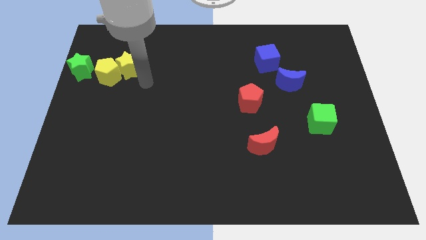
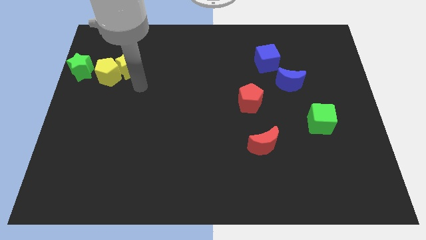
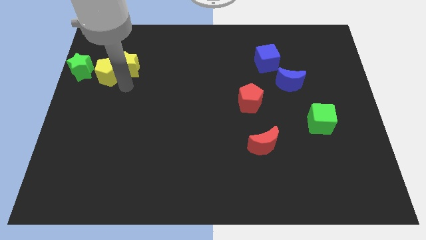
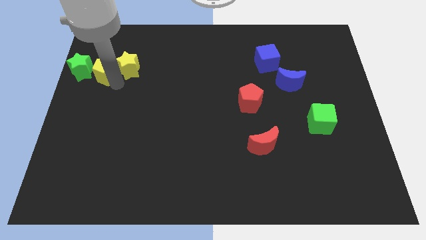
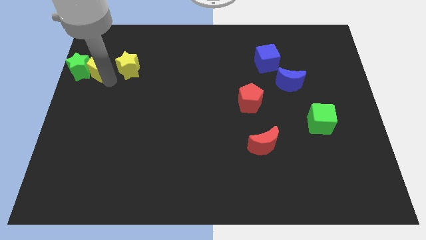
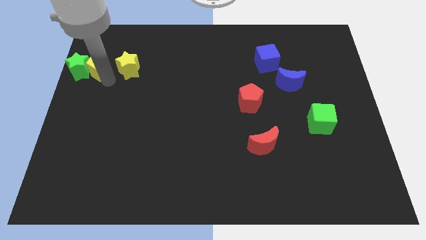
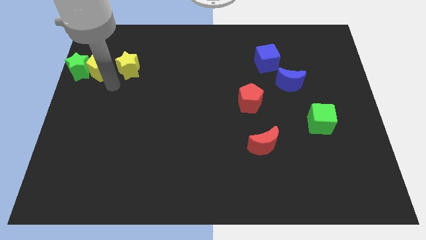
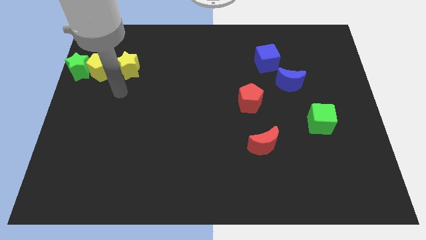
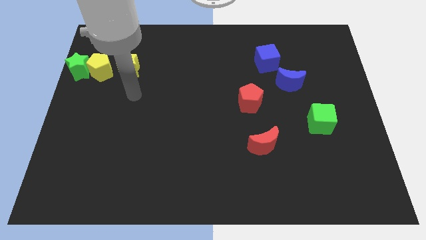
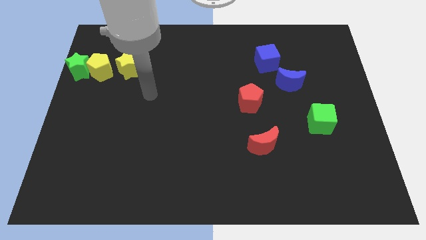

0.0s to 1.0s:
move the yellow pentagon into green star

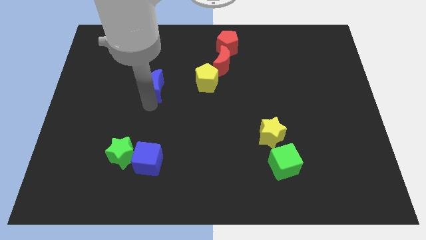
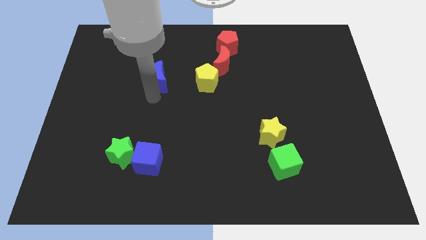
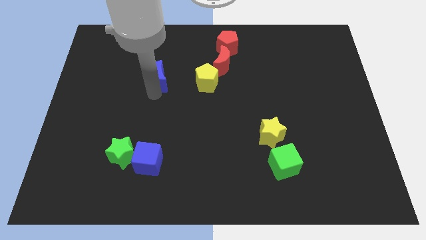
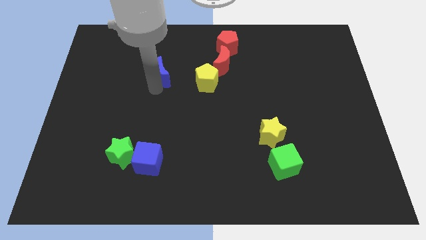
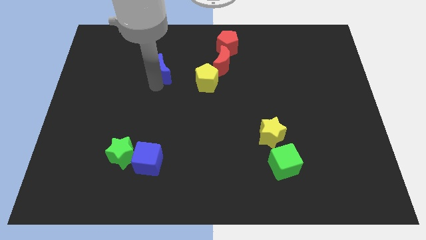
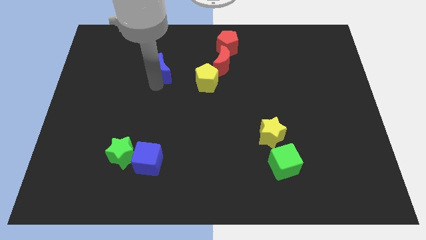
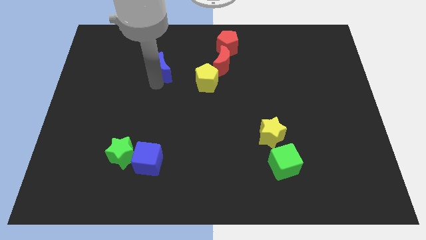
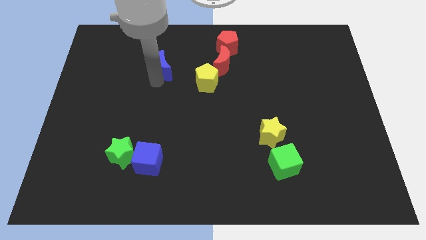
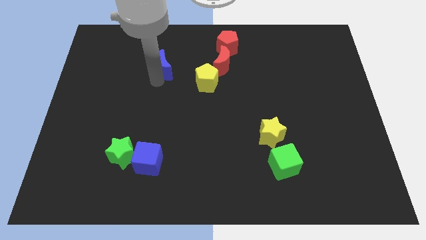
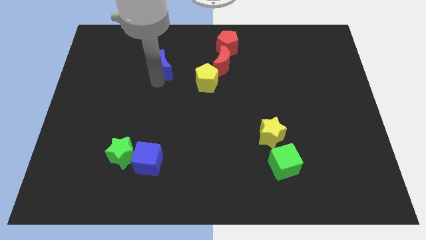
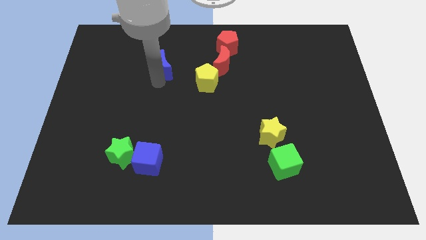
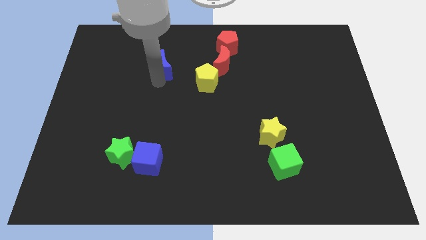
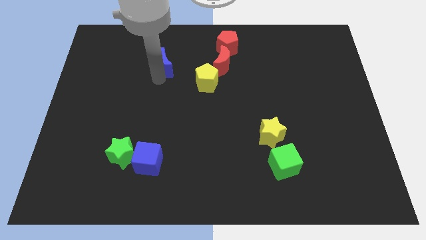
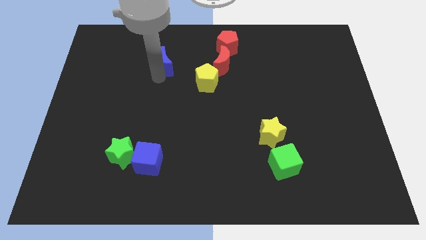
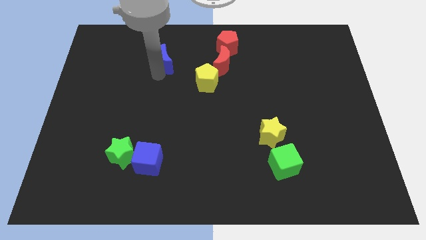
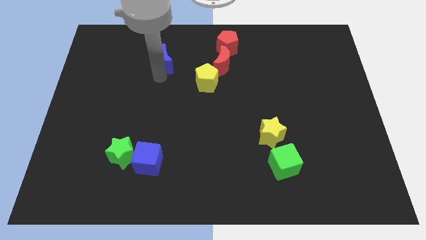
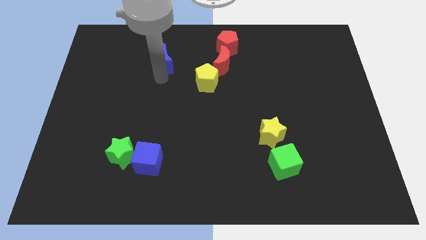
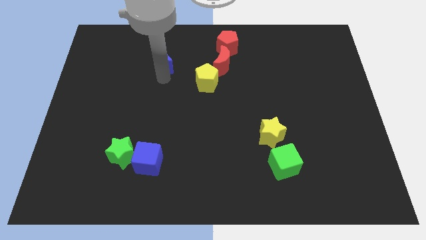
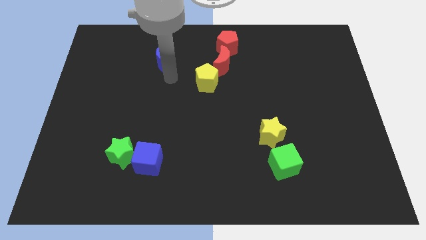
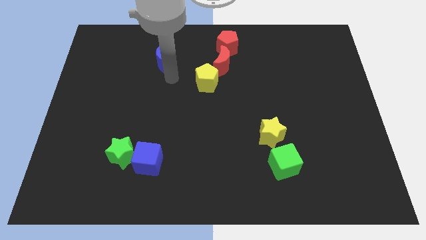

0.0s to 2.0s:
push the blue moon diagonally top left to the yellow pentagon

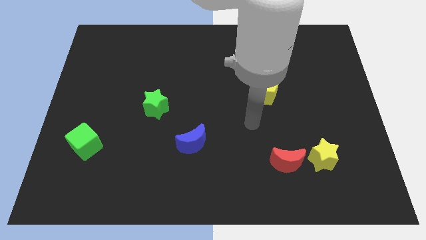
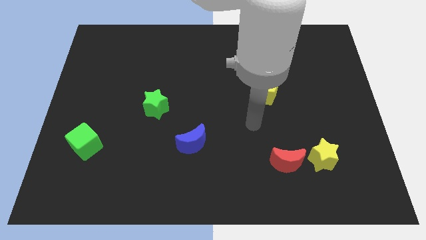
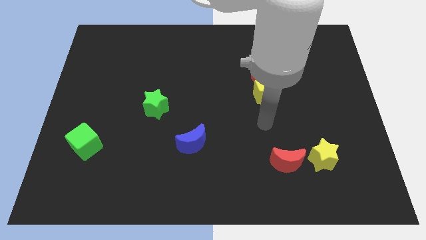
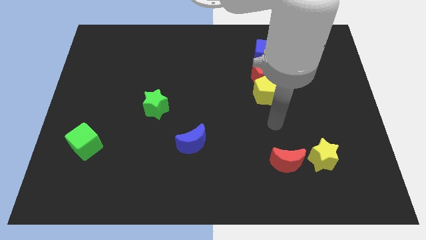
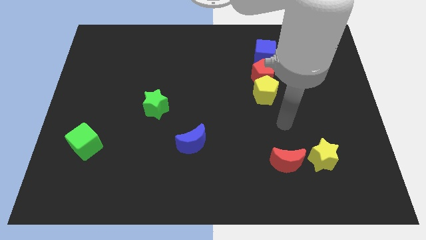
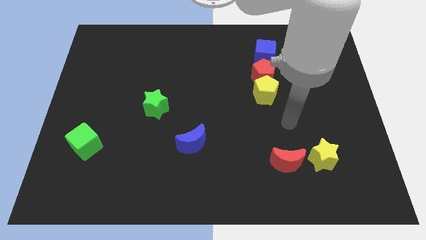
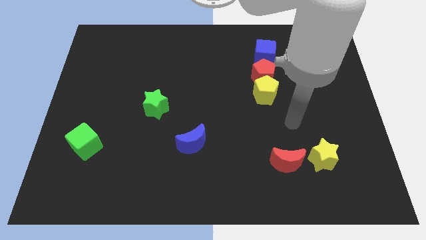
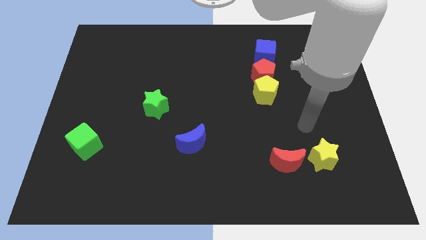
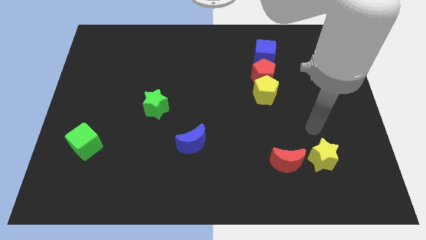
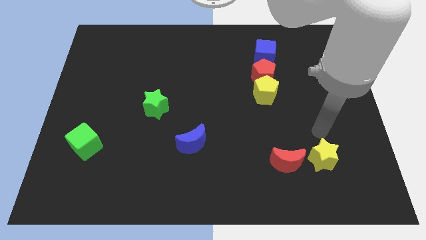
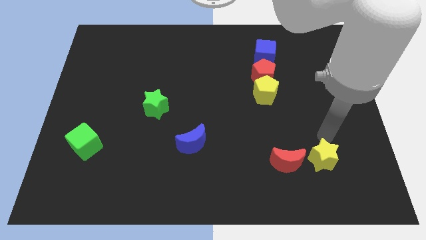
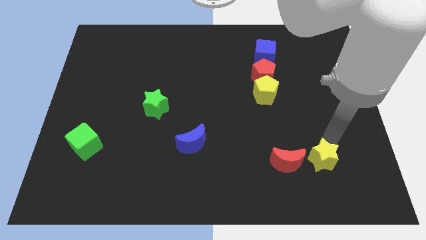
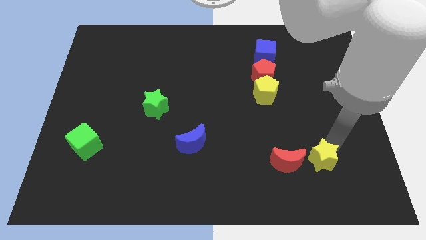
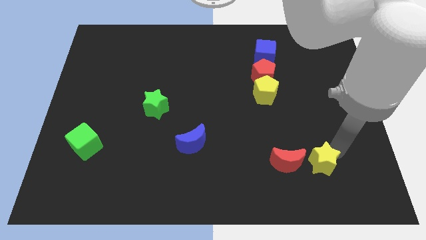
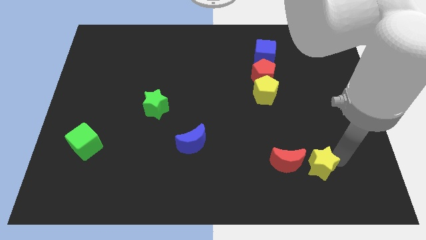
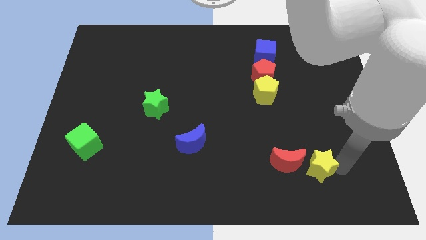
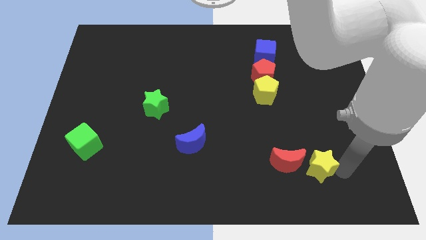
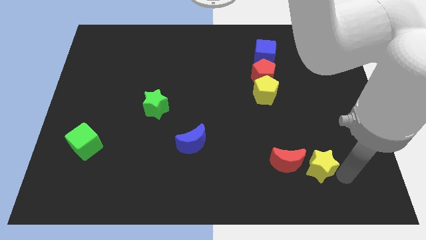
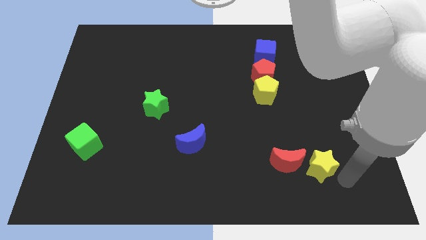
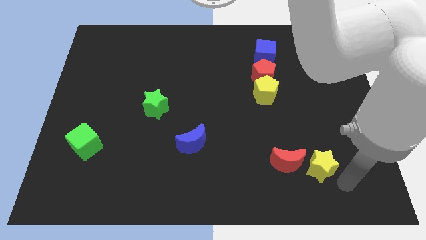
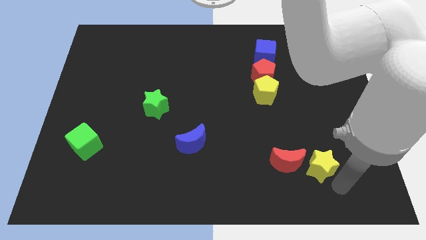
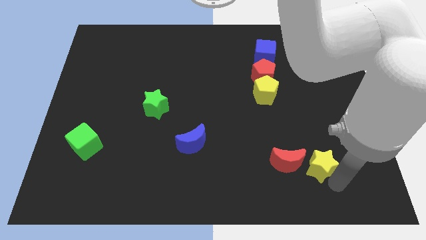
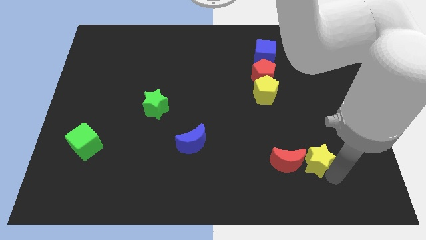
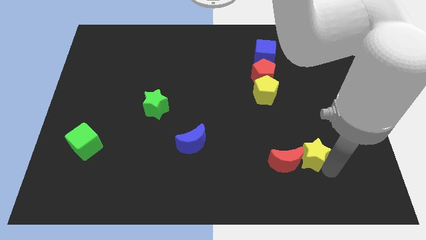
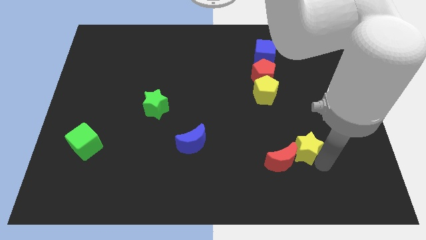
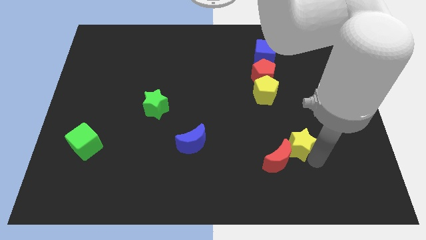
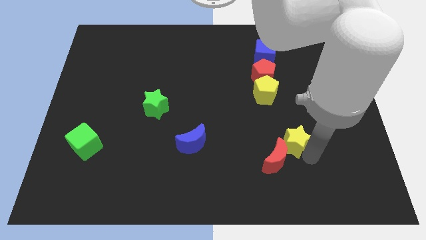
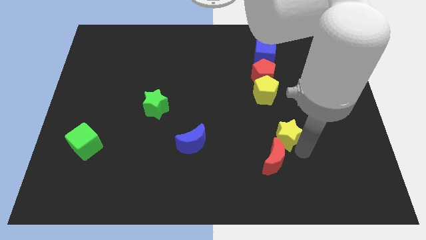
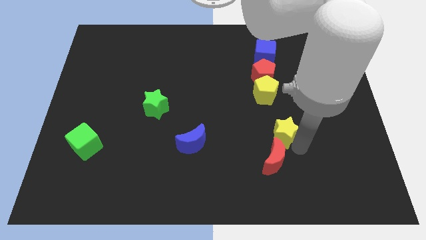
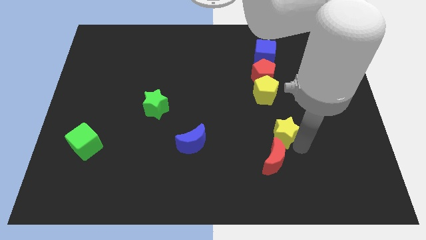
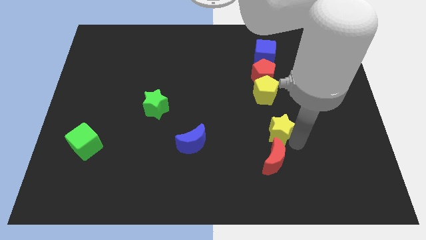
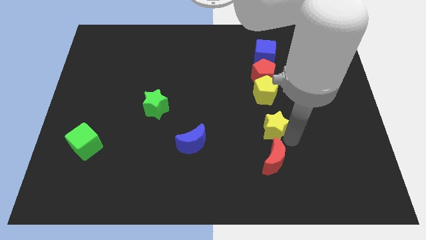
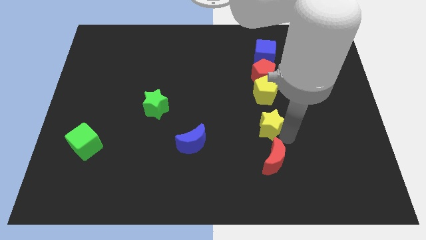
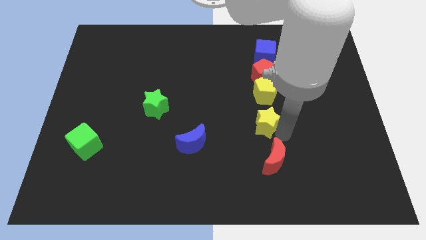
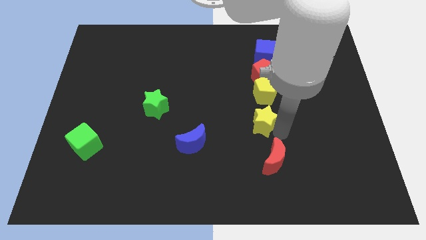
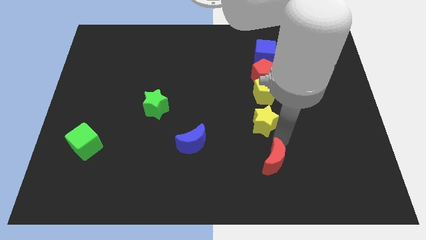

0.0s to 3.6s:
push the yellow star below the yellow pentagon

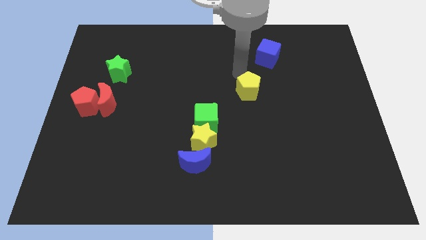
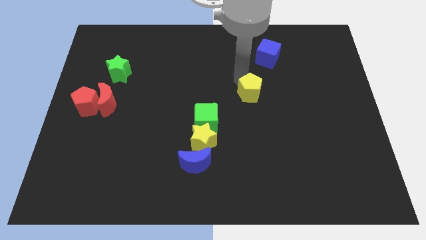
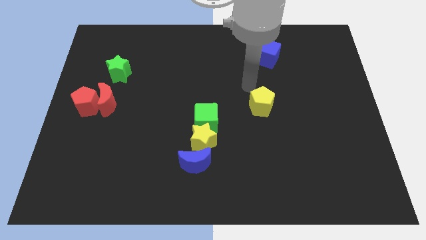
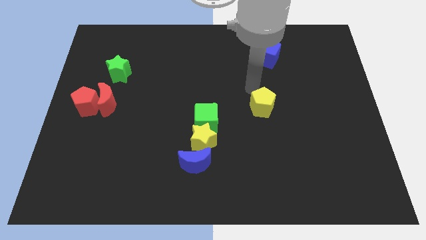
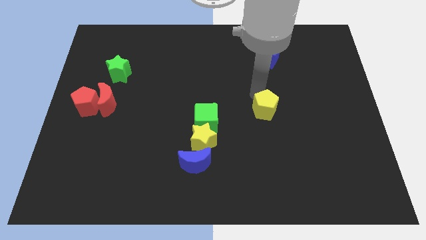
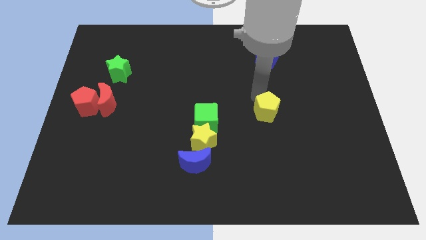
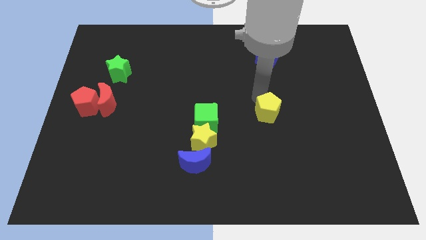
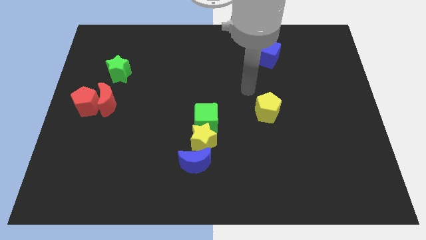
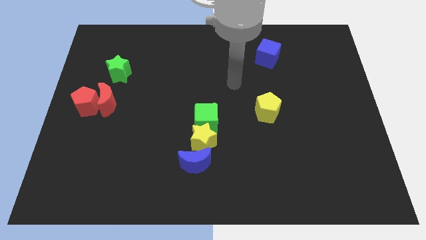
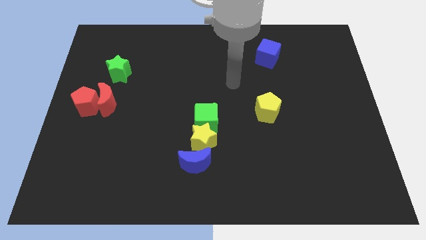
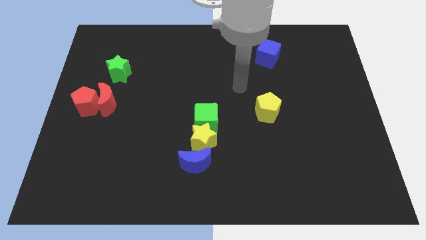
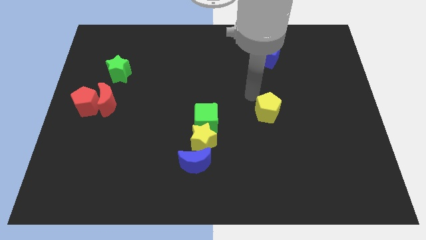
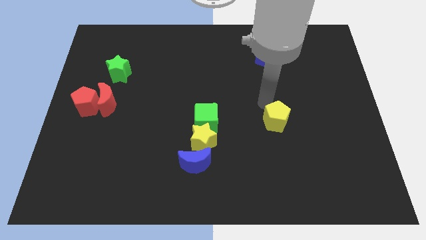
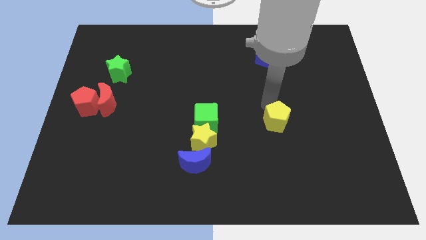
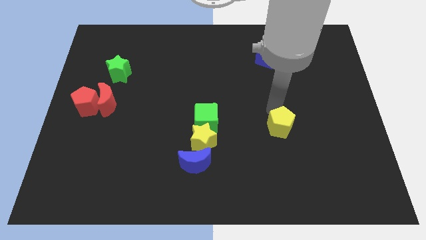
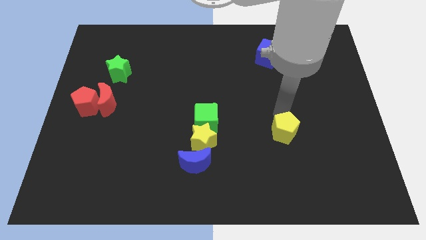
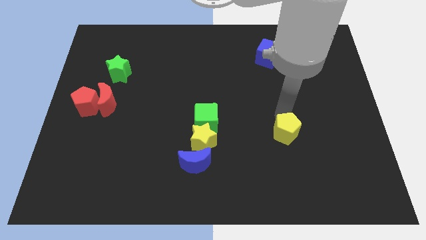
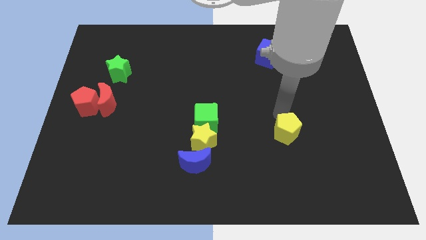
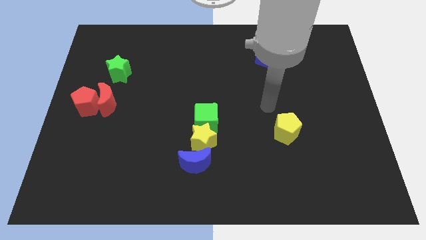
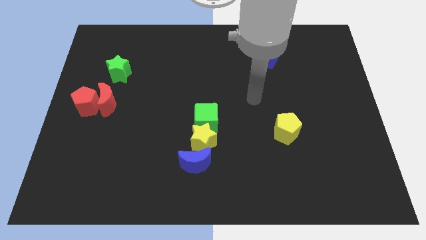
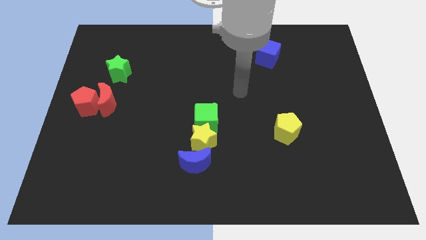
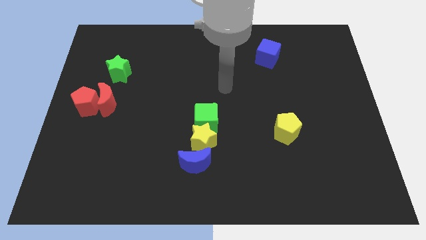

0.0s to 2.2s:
move the yellow pentagon towards the bottom

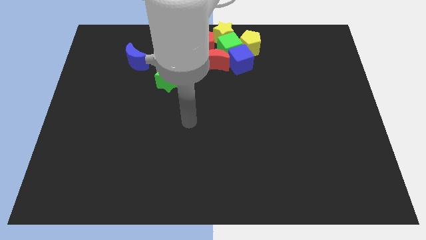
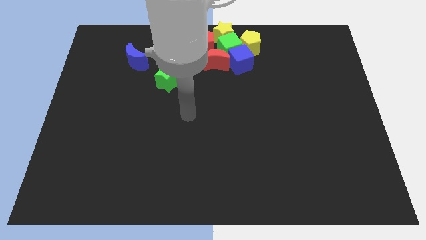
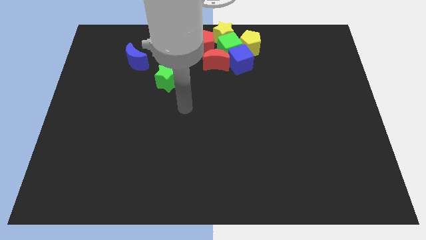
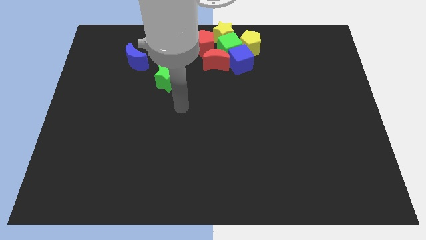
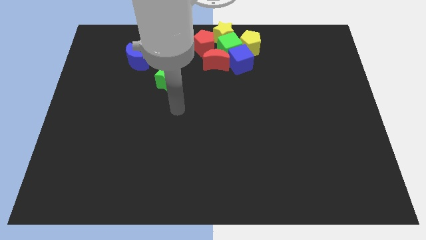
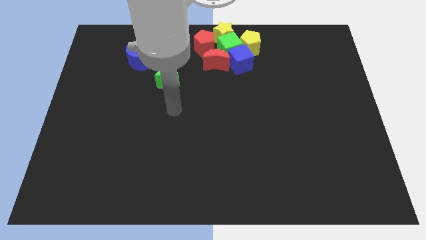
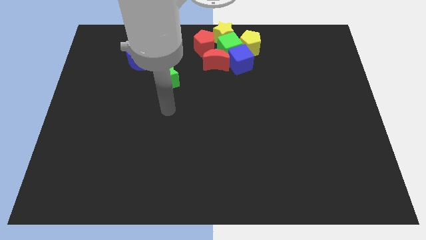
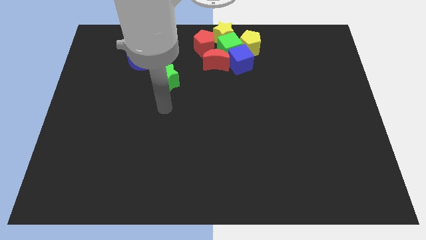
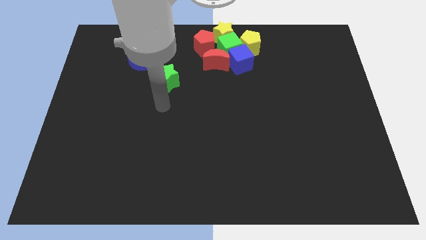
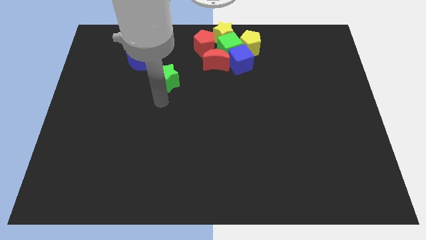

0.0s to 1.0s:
move your hand to the bottom of the green star
